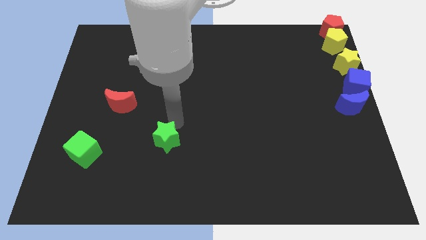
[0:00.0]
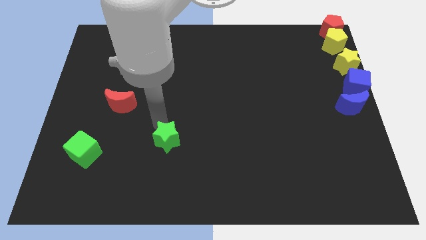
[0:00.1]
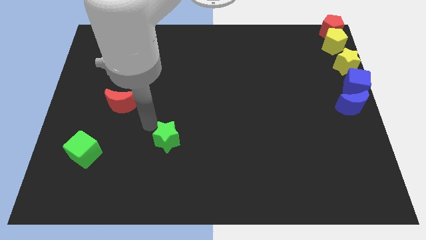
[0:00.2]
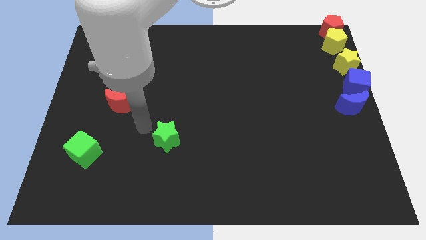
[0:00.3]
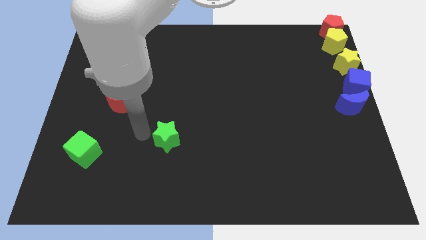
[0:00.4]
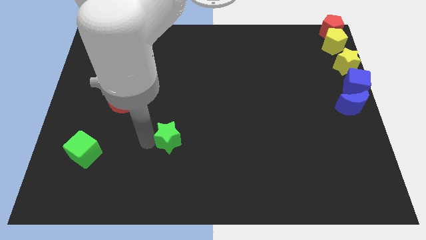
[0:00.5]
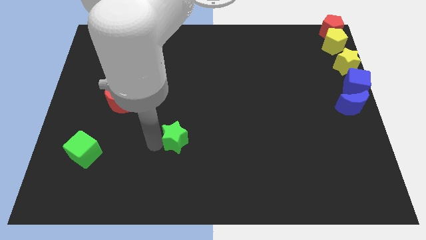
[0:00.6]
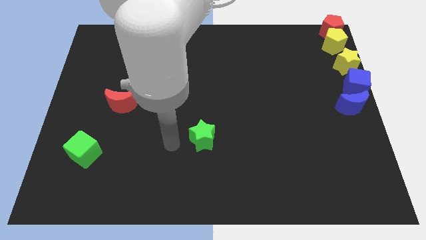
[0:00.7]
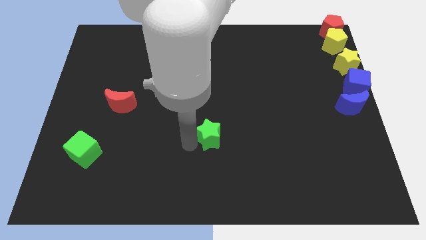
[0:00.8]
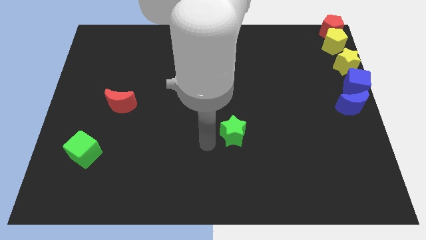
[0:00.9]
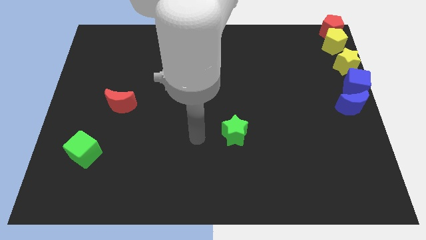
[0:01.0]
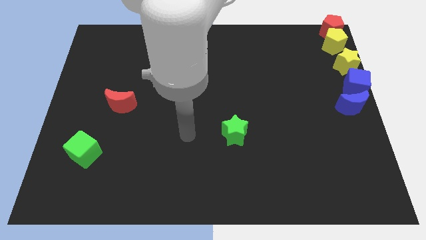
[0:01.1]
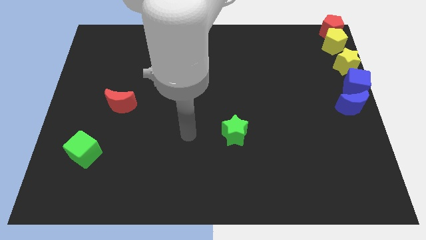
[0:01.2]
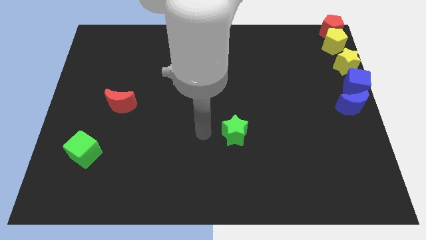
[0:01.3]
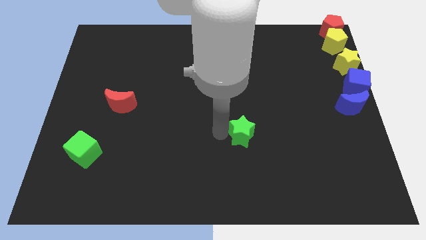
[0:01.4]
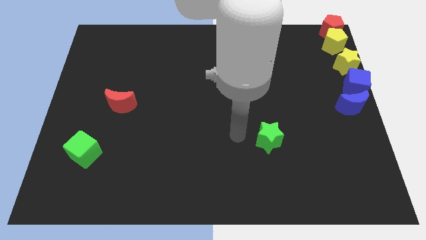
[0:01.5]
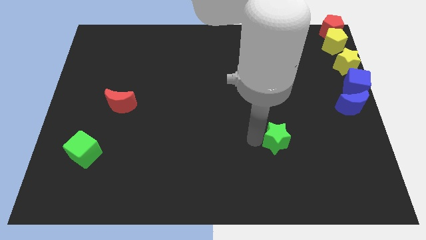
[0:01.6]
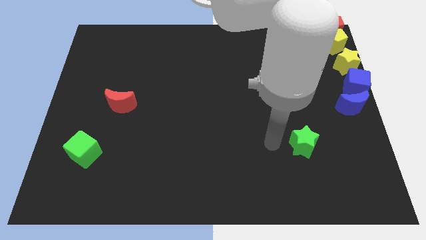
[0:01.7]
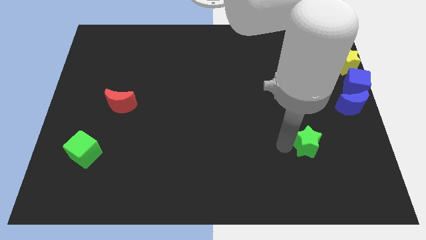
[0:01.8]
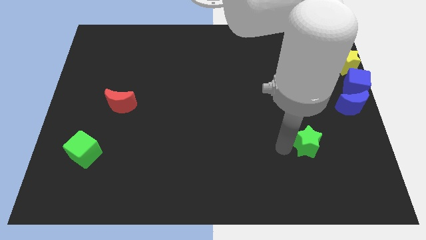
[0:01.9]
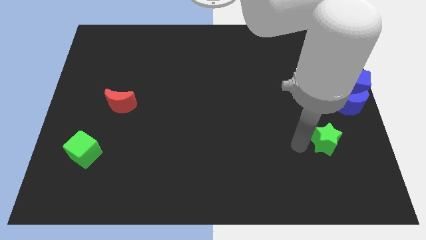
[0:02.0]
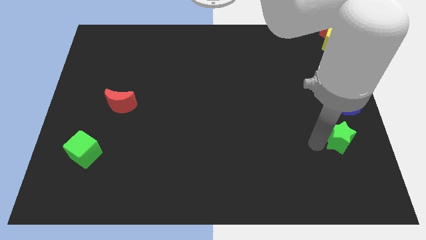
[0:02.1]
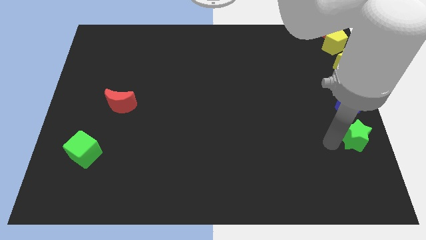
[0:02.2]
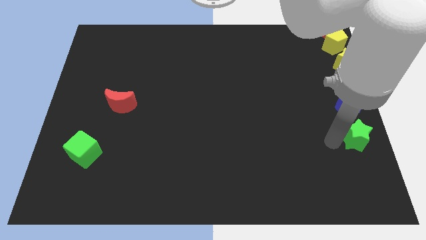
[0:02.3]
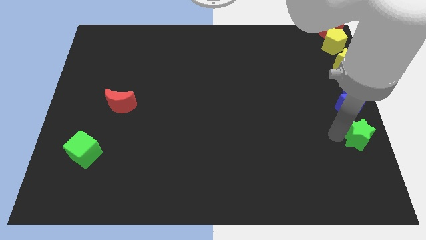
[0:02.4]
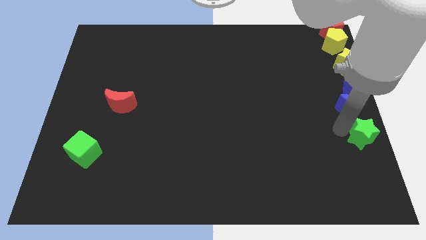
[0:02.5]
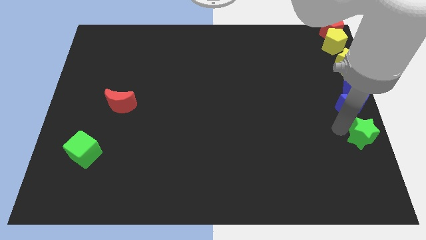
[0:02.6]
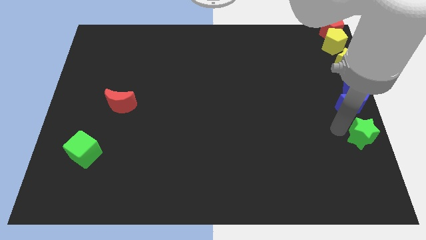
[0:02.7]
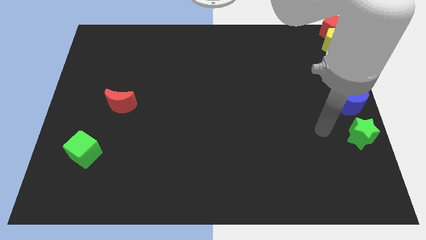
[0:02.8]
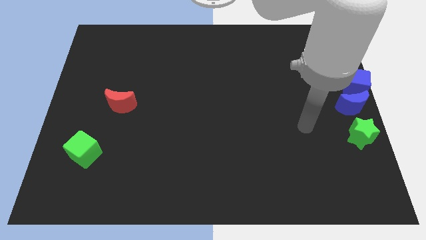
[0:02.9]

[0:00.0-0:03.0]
place the green star under the blue crescent

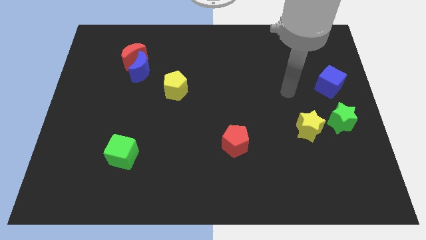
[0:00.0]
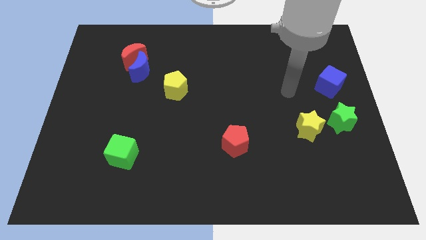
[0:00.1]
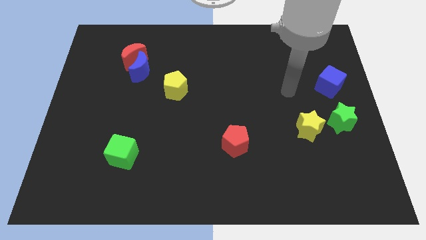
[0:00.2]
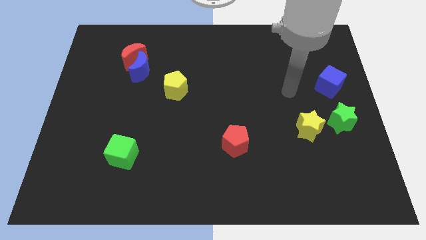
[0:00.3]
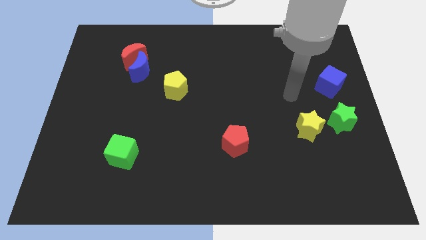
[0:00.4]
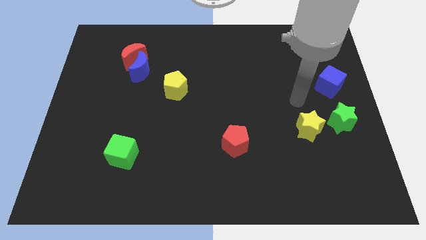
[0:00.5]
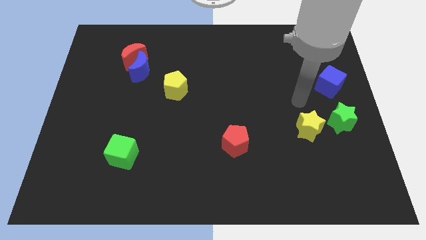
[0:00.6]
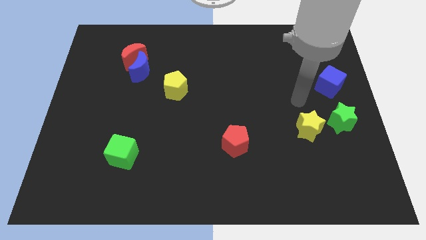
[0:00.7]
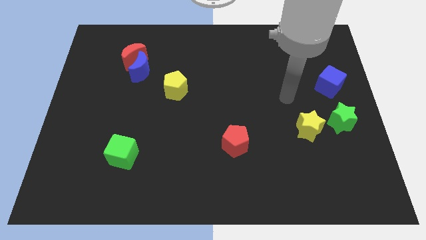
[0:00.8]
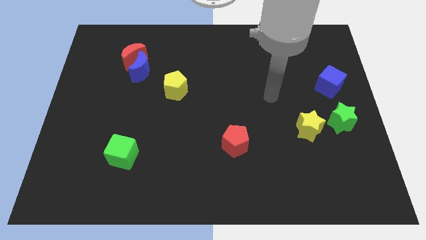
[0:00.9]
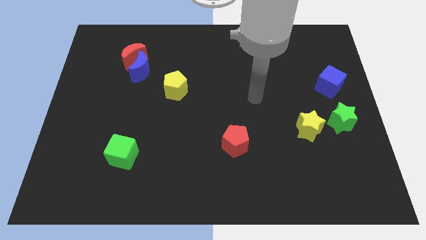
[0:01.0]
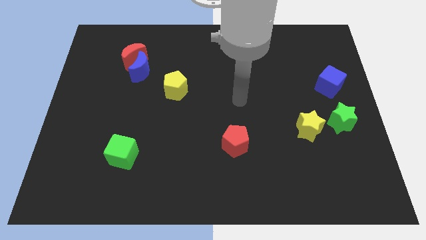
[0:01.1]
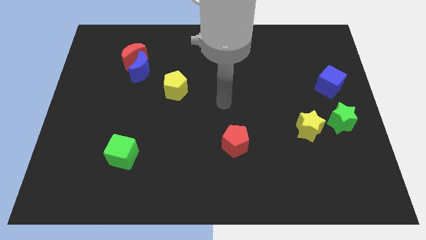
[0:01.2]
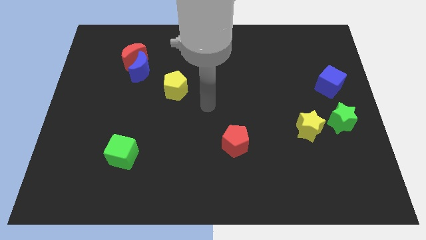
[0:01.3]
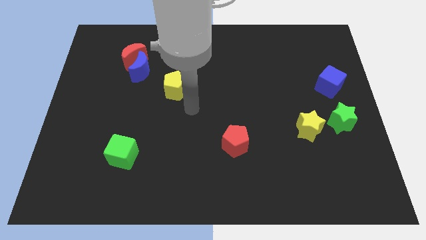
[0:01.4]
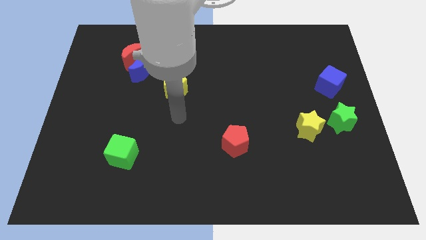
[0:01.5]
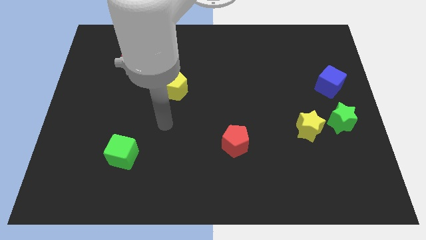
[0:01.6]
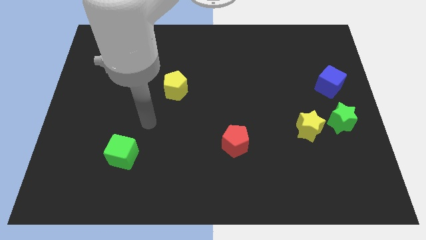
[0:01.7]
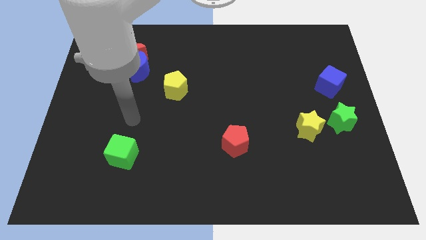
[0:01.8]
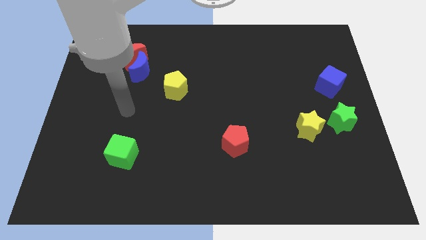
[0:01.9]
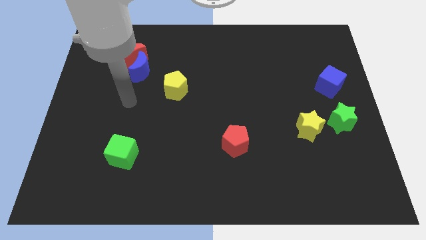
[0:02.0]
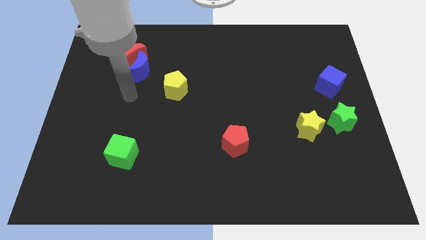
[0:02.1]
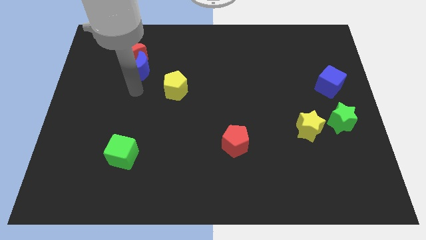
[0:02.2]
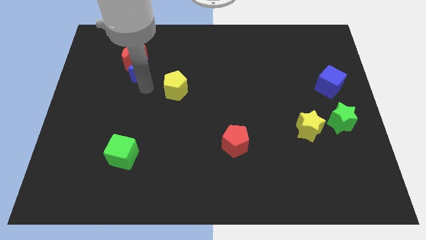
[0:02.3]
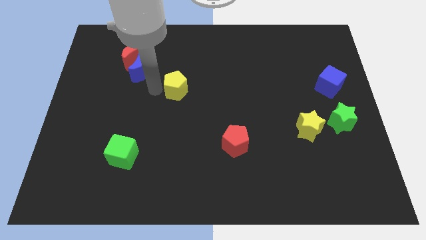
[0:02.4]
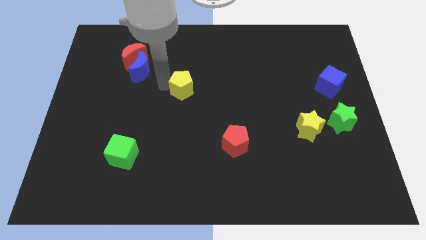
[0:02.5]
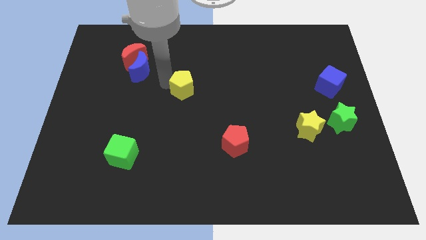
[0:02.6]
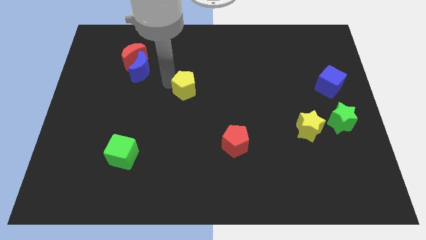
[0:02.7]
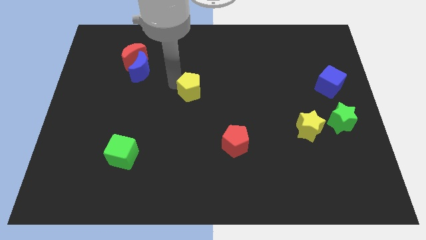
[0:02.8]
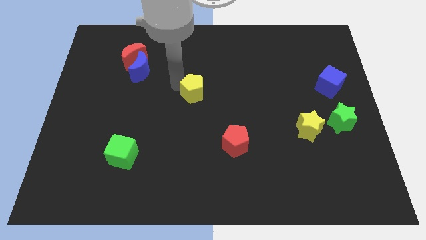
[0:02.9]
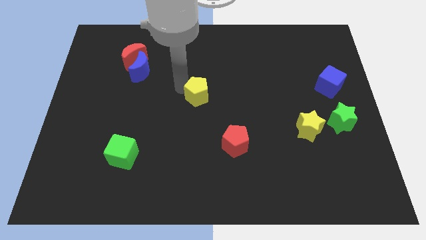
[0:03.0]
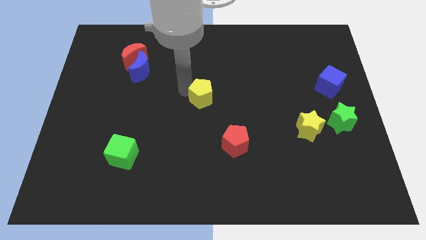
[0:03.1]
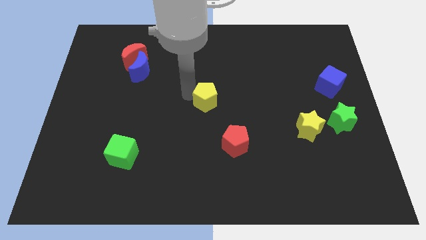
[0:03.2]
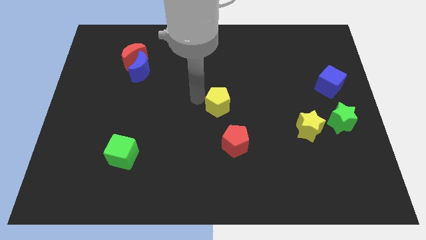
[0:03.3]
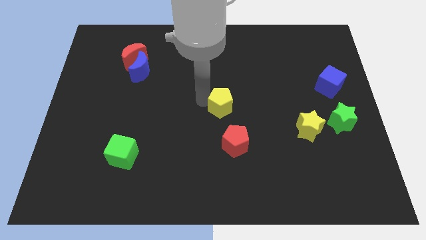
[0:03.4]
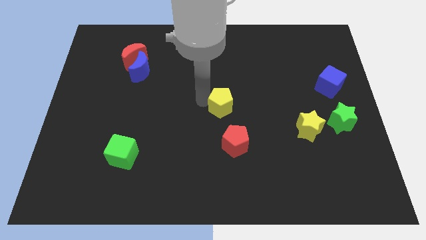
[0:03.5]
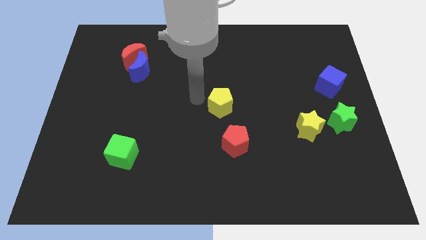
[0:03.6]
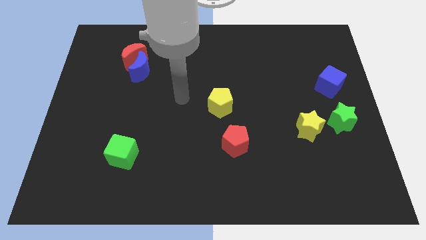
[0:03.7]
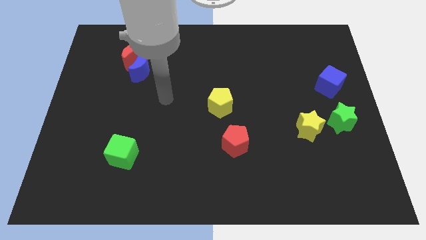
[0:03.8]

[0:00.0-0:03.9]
place the yellow pentagon at the center of the board

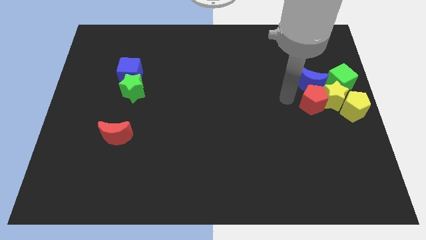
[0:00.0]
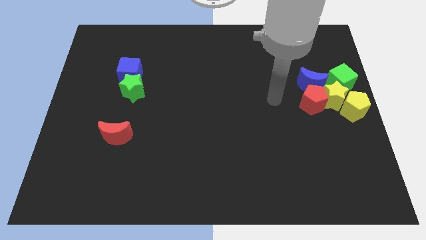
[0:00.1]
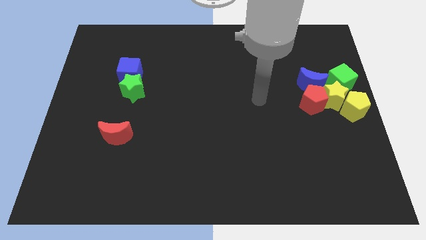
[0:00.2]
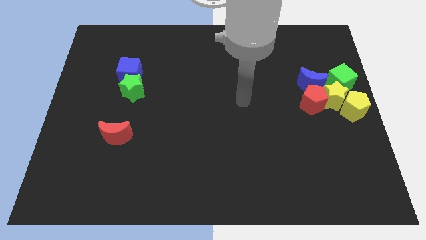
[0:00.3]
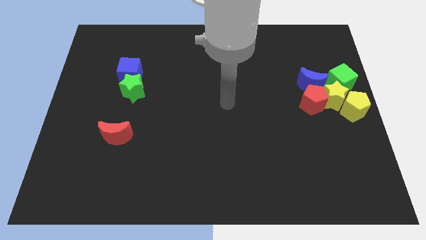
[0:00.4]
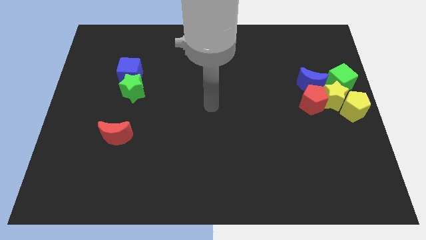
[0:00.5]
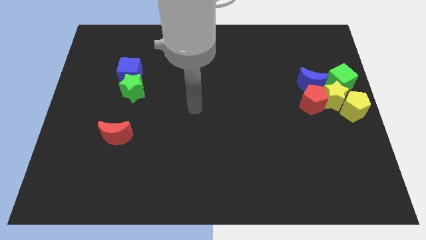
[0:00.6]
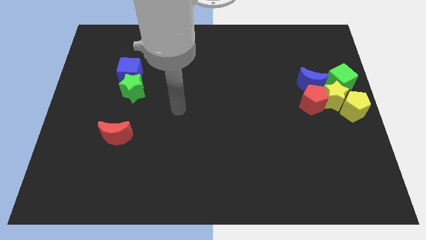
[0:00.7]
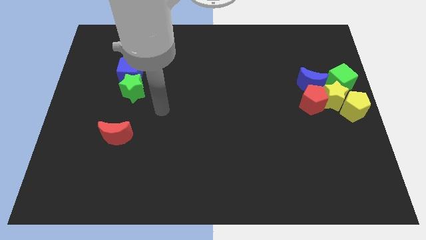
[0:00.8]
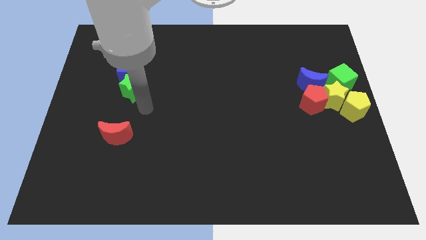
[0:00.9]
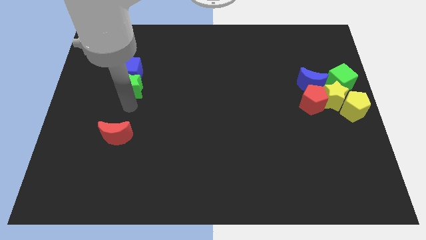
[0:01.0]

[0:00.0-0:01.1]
move the arm away from the red pentagon

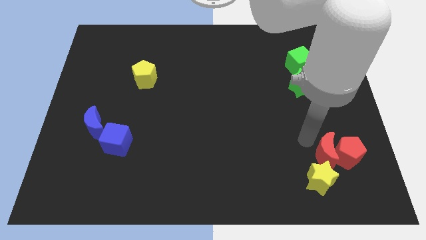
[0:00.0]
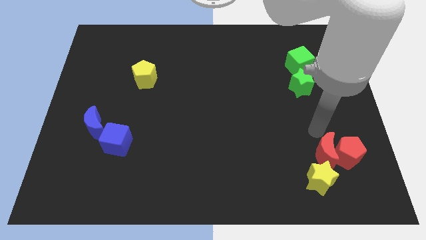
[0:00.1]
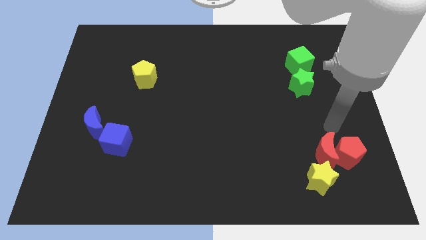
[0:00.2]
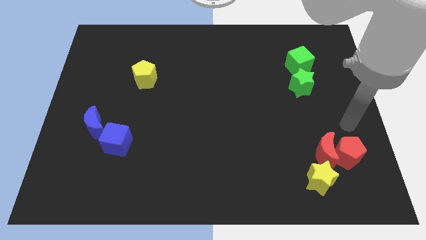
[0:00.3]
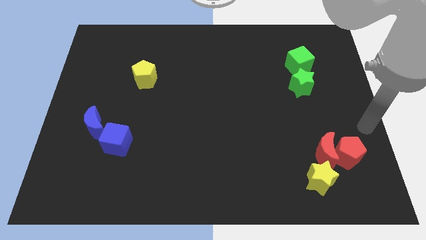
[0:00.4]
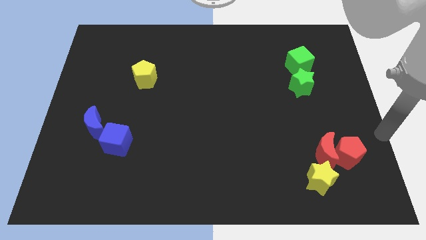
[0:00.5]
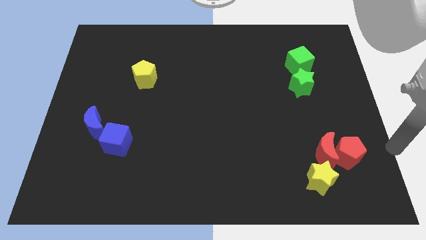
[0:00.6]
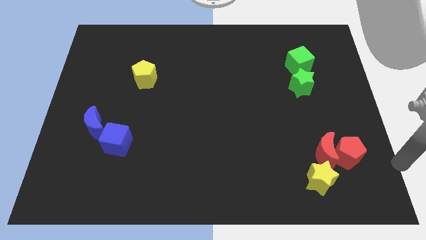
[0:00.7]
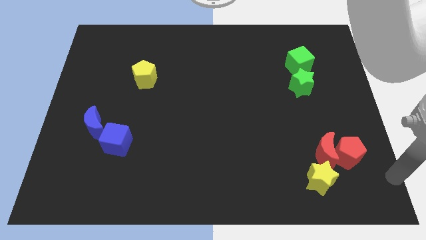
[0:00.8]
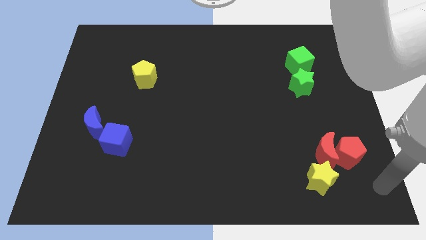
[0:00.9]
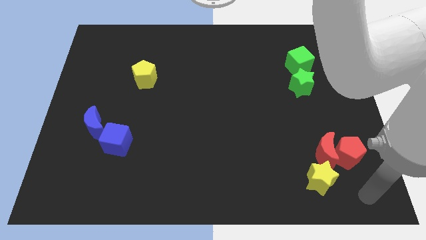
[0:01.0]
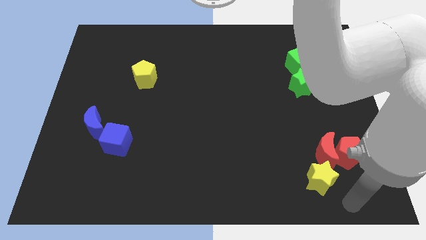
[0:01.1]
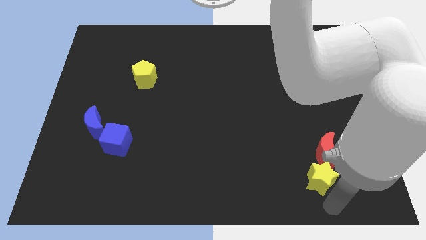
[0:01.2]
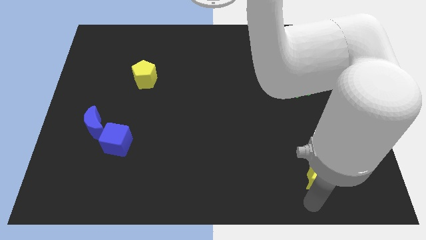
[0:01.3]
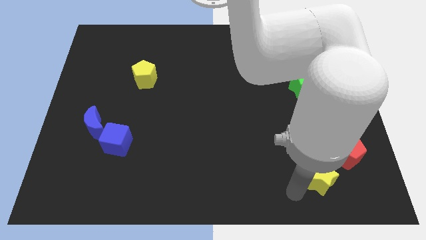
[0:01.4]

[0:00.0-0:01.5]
move your arm to the bottom of the yellow star
